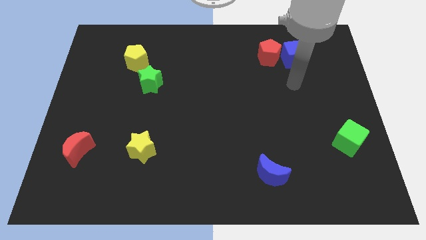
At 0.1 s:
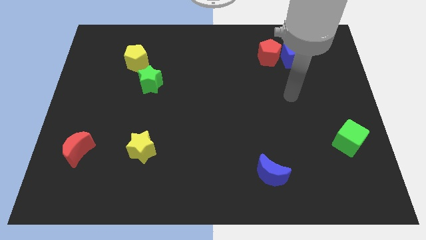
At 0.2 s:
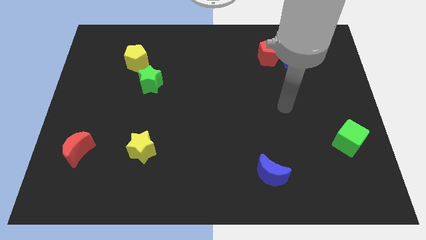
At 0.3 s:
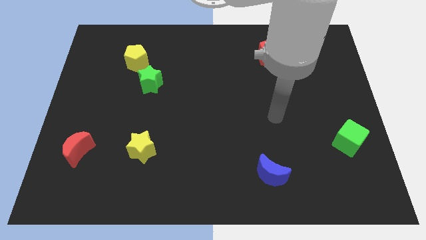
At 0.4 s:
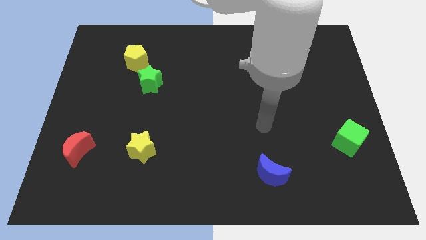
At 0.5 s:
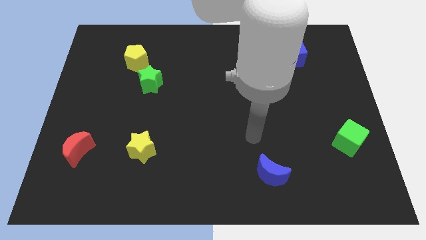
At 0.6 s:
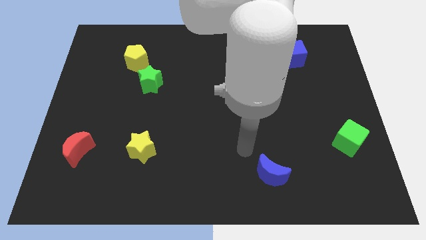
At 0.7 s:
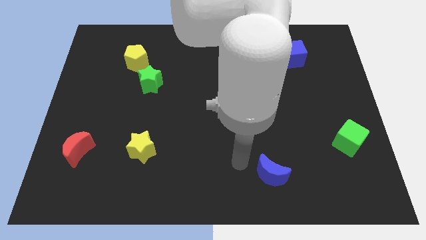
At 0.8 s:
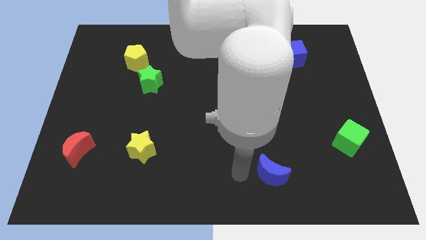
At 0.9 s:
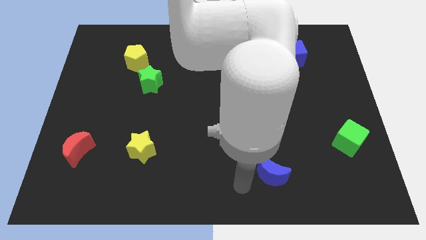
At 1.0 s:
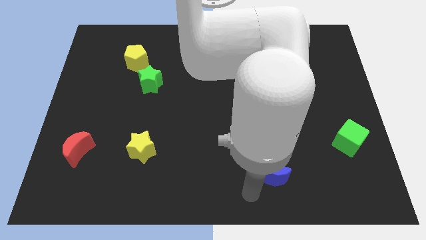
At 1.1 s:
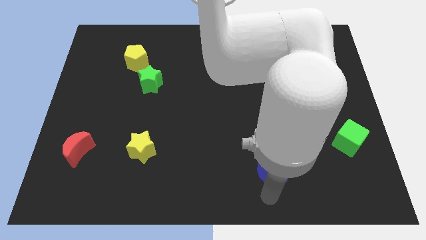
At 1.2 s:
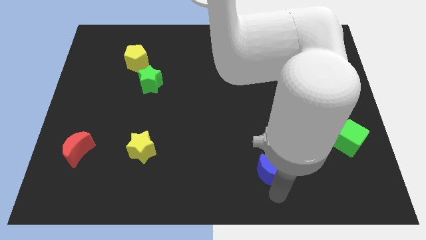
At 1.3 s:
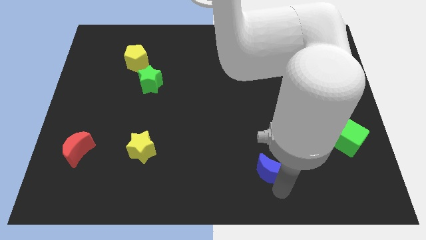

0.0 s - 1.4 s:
tap the blue crescent

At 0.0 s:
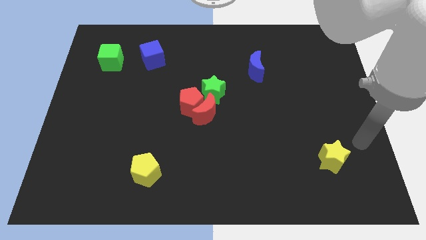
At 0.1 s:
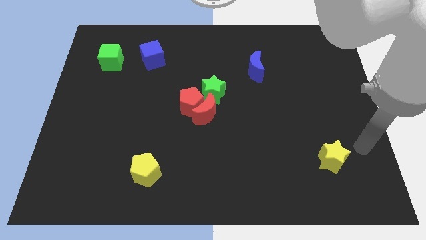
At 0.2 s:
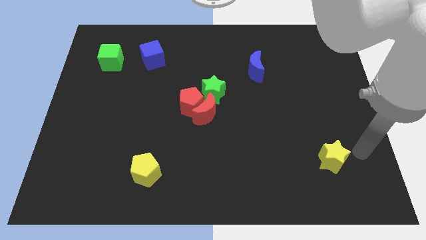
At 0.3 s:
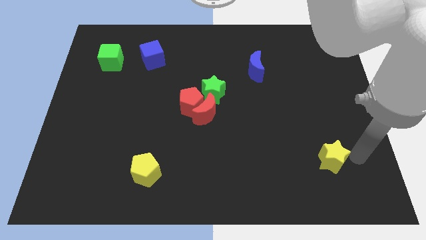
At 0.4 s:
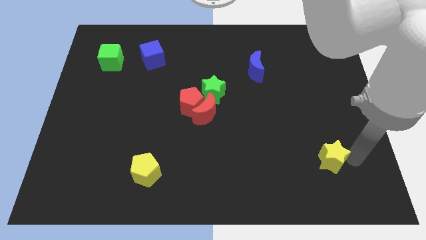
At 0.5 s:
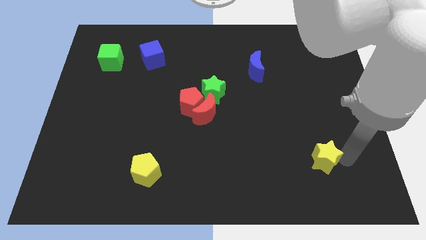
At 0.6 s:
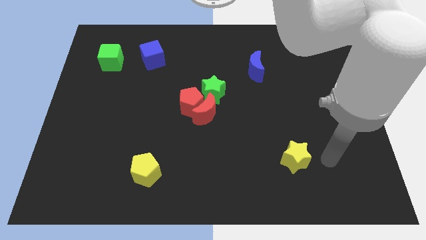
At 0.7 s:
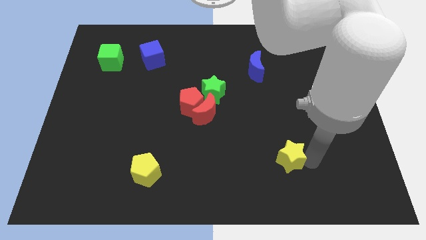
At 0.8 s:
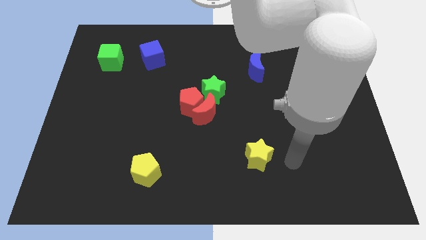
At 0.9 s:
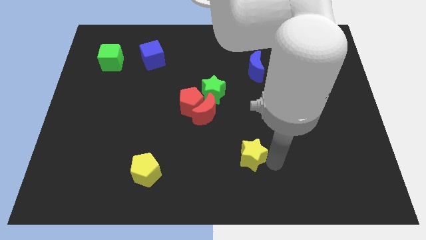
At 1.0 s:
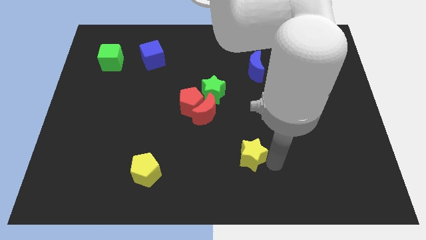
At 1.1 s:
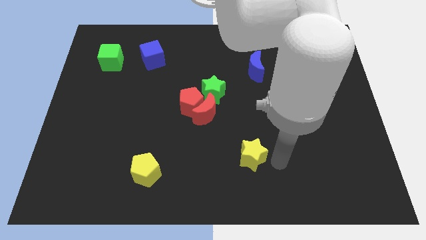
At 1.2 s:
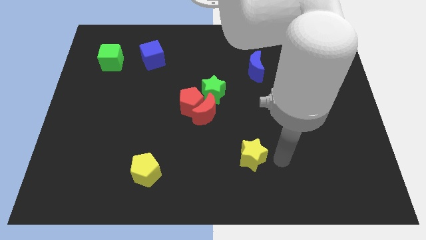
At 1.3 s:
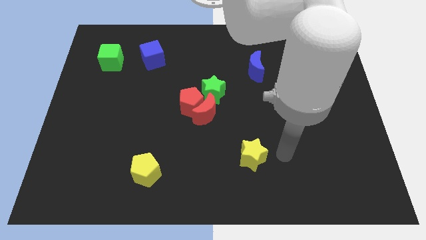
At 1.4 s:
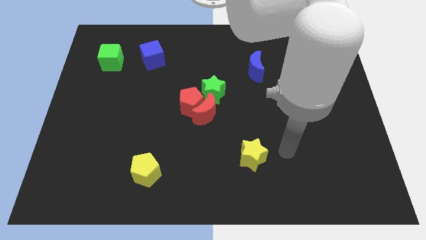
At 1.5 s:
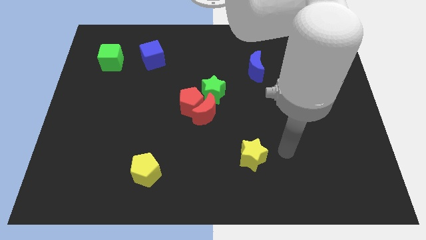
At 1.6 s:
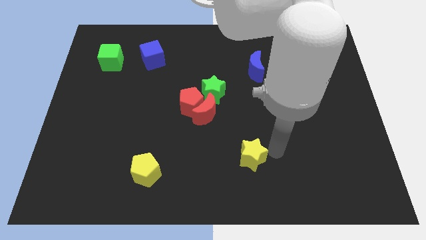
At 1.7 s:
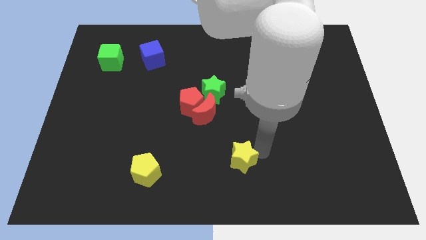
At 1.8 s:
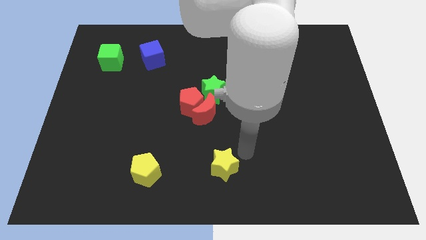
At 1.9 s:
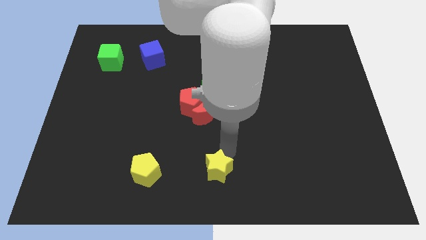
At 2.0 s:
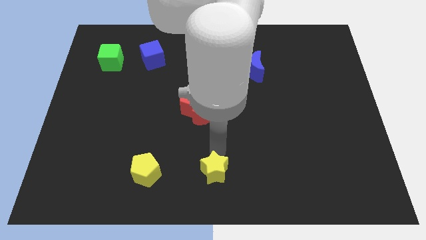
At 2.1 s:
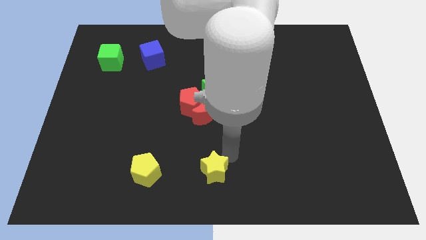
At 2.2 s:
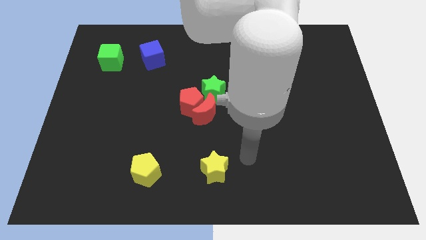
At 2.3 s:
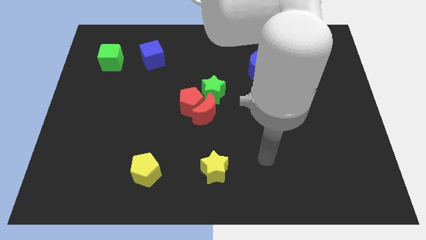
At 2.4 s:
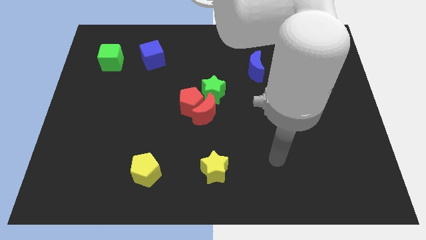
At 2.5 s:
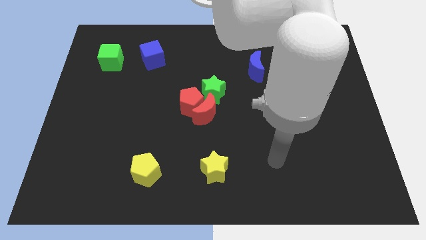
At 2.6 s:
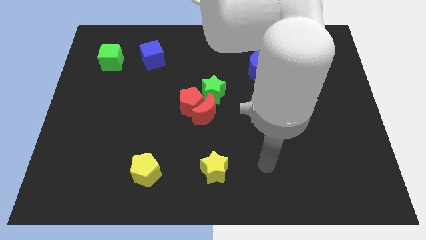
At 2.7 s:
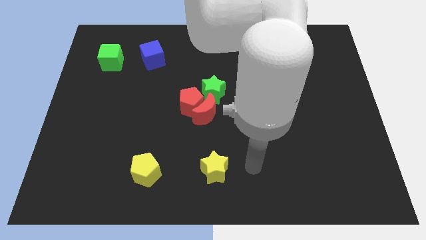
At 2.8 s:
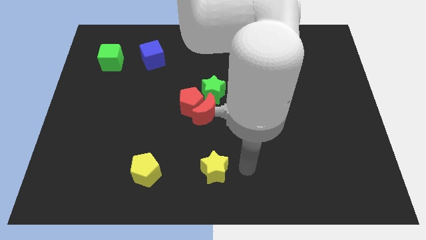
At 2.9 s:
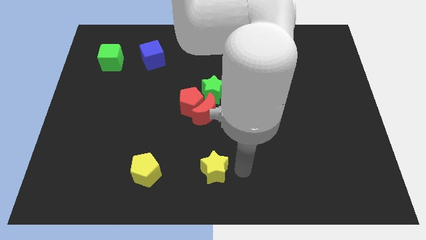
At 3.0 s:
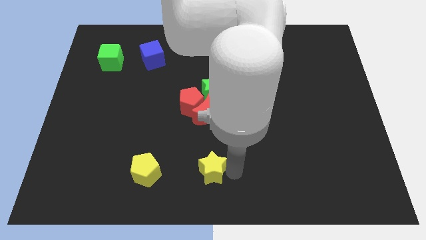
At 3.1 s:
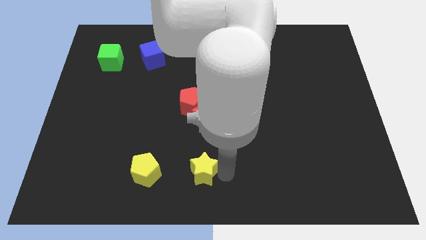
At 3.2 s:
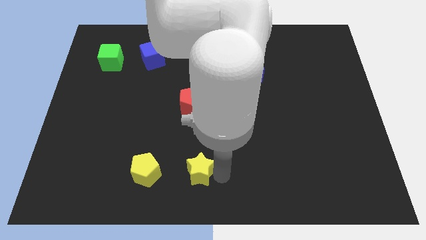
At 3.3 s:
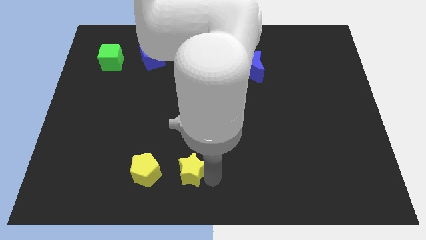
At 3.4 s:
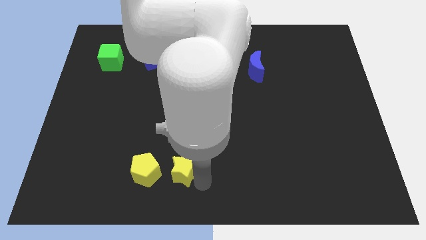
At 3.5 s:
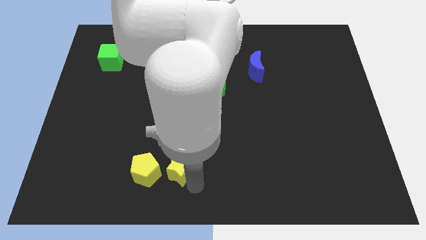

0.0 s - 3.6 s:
move the yellow star to the right side of the yellow pentagon

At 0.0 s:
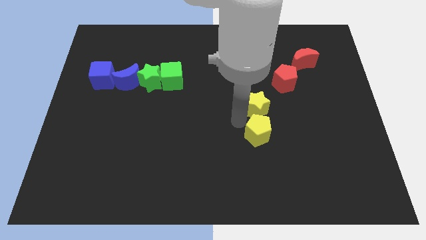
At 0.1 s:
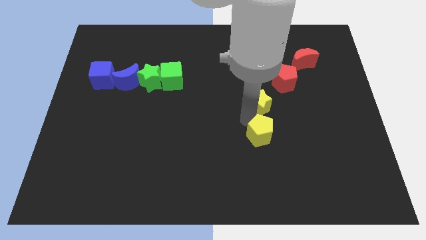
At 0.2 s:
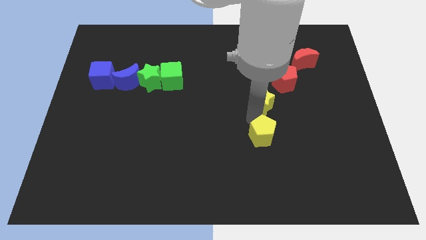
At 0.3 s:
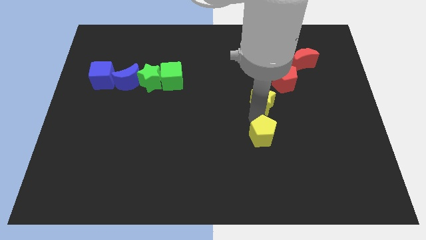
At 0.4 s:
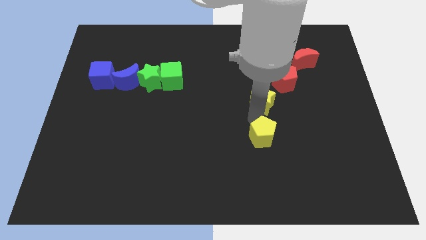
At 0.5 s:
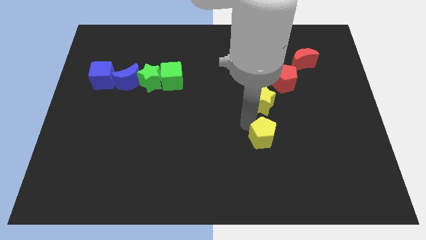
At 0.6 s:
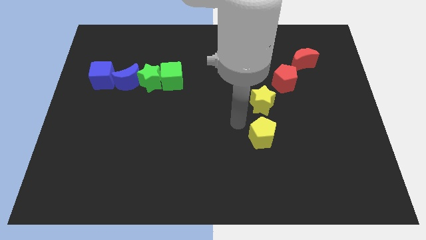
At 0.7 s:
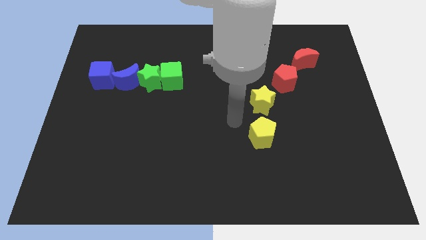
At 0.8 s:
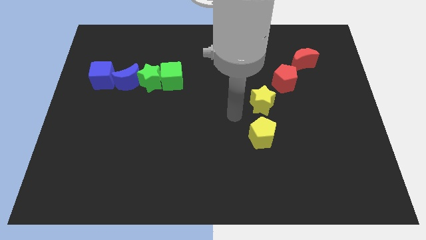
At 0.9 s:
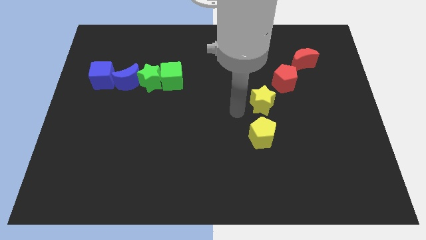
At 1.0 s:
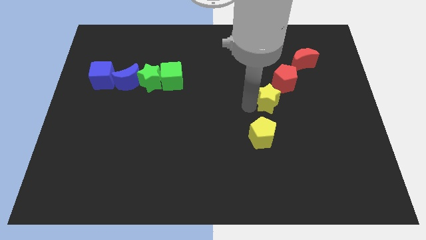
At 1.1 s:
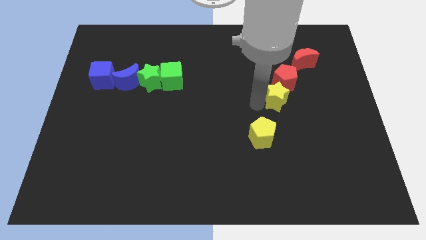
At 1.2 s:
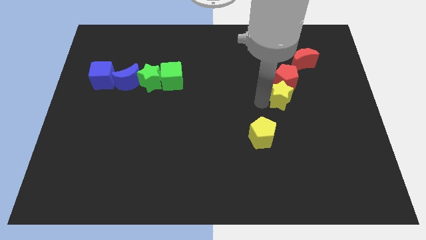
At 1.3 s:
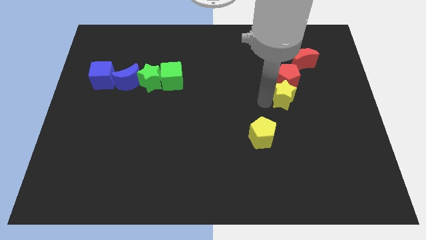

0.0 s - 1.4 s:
place the yellow star below the red pentagon

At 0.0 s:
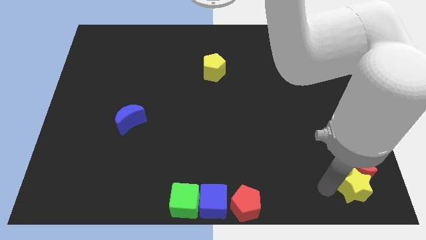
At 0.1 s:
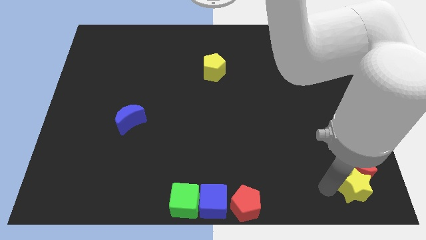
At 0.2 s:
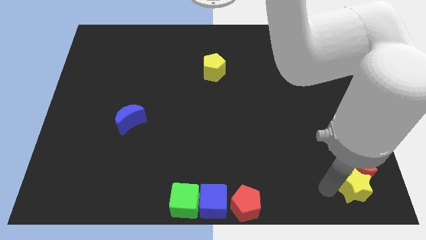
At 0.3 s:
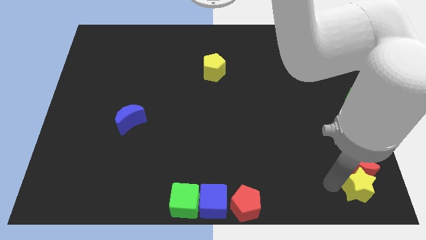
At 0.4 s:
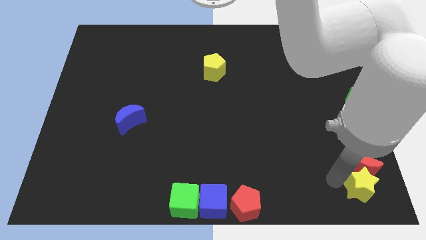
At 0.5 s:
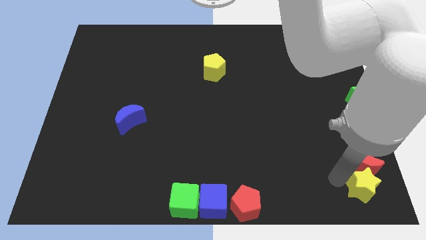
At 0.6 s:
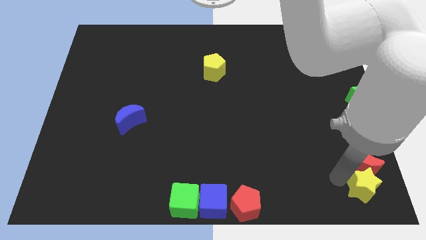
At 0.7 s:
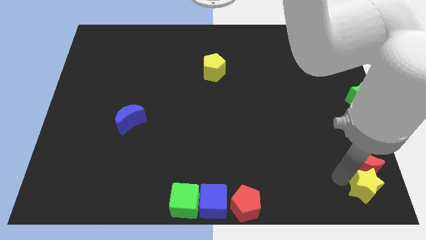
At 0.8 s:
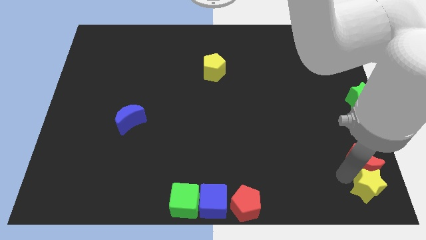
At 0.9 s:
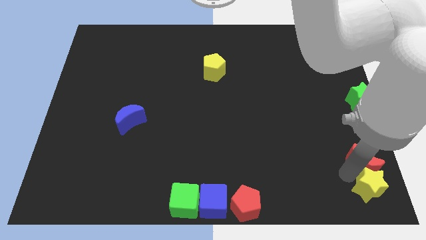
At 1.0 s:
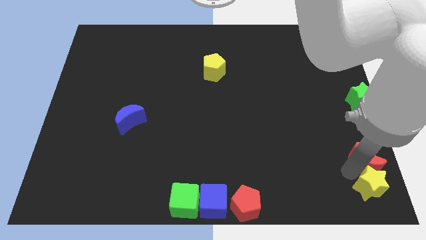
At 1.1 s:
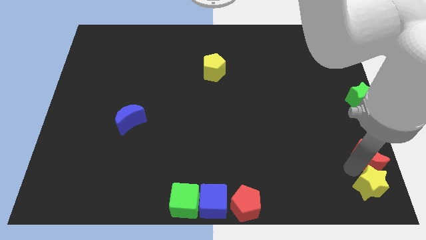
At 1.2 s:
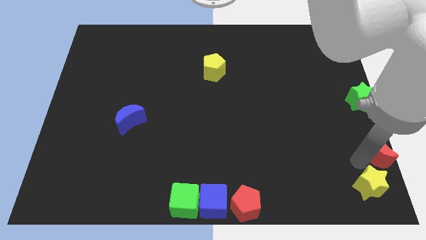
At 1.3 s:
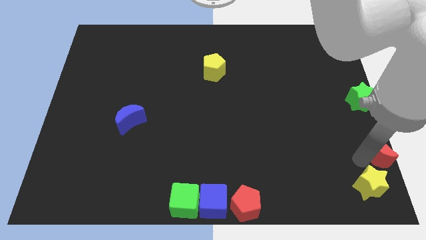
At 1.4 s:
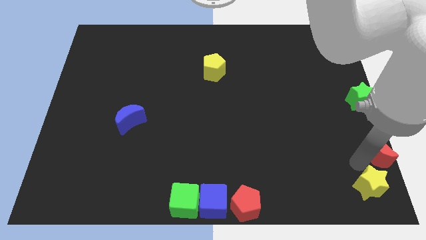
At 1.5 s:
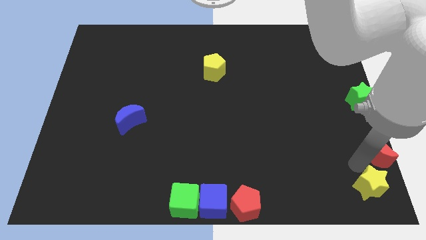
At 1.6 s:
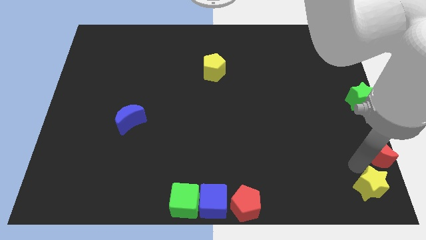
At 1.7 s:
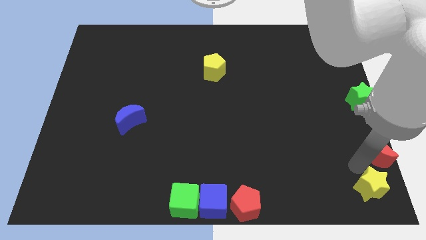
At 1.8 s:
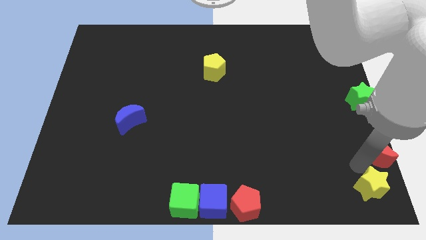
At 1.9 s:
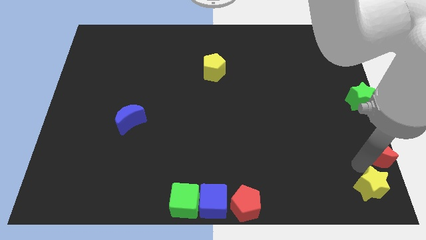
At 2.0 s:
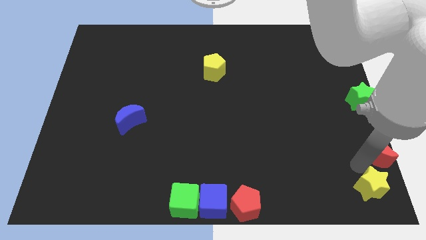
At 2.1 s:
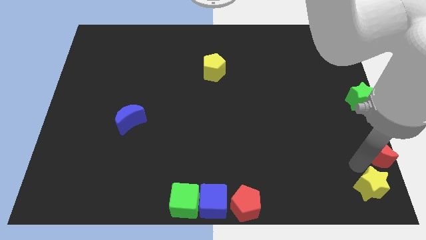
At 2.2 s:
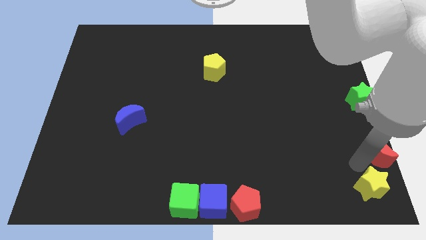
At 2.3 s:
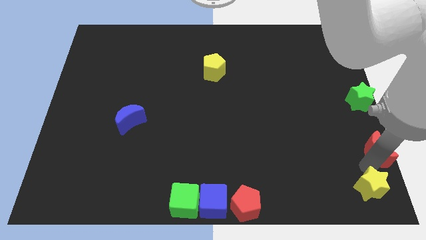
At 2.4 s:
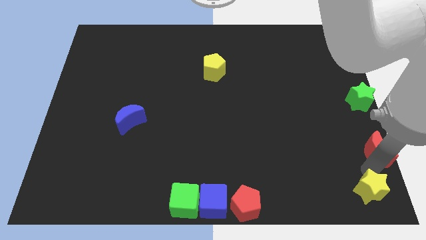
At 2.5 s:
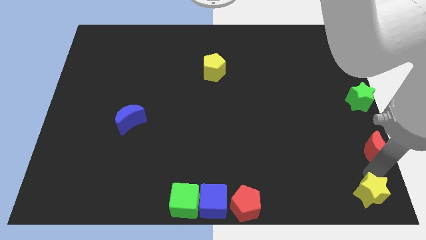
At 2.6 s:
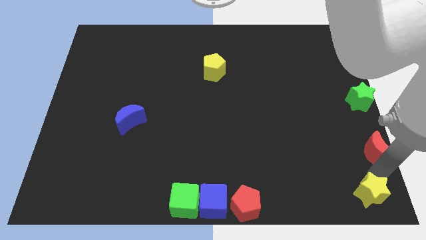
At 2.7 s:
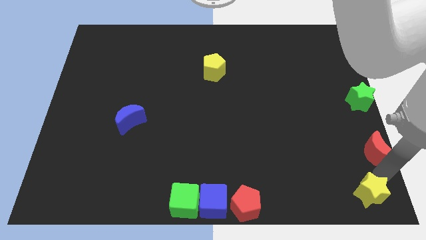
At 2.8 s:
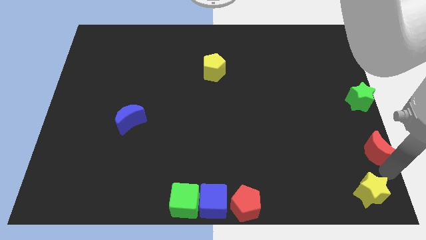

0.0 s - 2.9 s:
point your arm between red pentagon and yellow star
